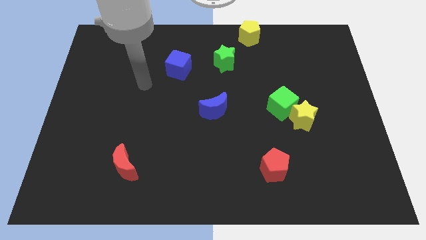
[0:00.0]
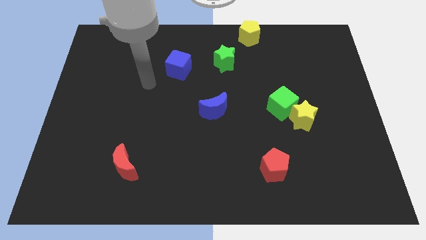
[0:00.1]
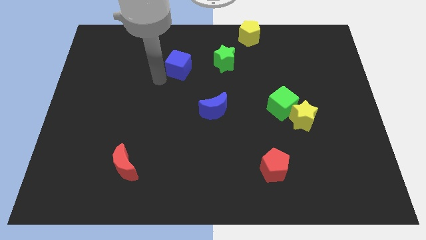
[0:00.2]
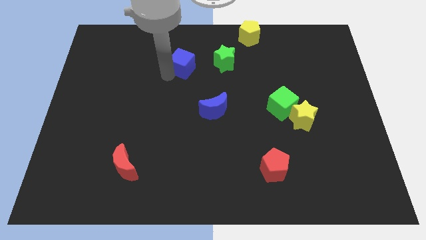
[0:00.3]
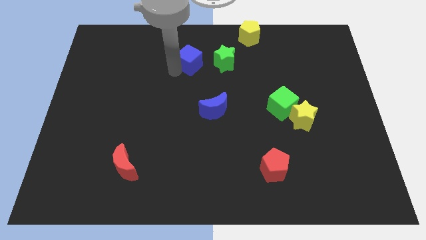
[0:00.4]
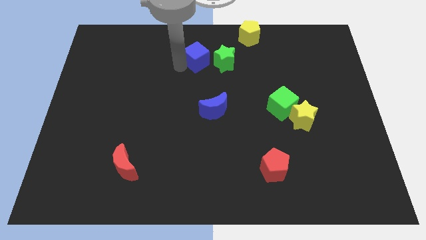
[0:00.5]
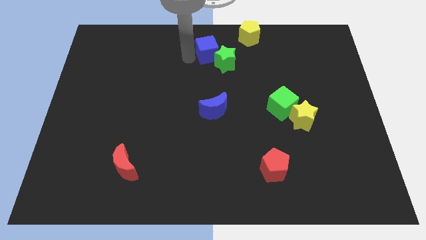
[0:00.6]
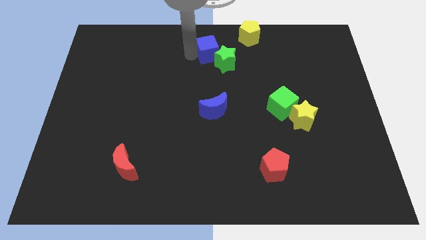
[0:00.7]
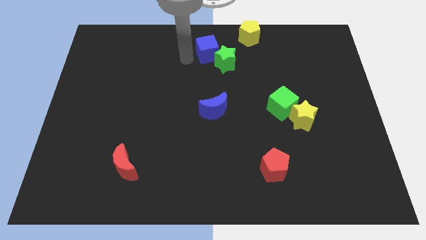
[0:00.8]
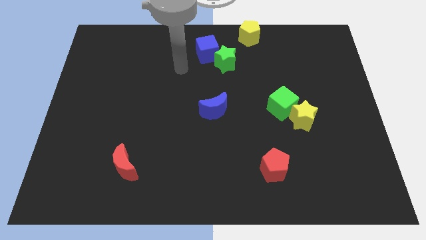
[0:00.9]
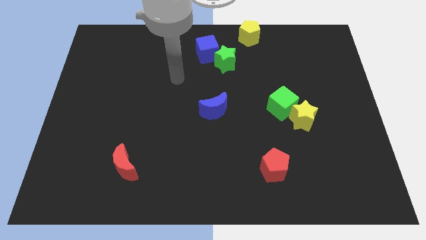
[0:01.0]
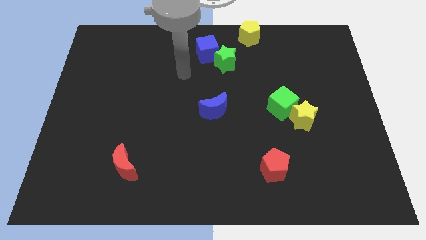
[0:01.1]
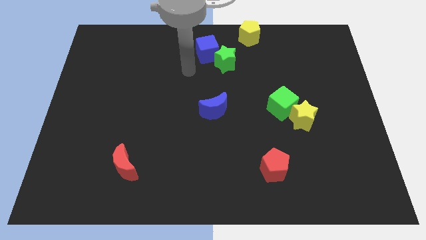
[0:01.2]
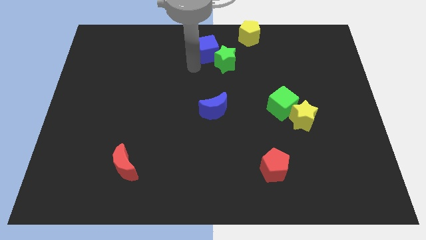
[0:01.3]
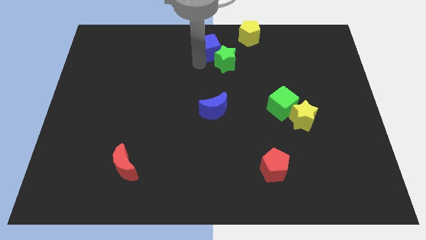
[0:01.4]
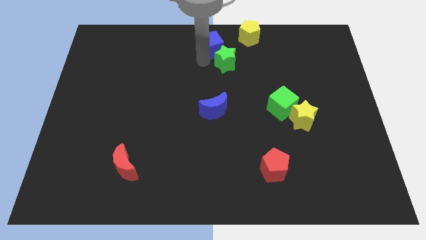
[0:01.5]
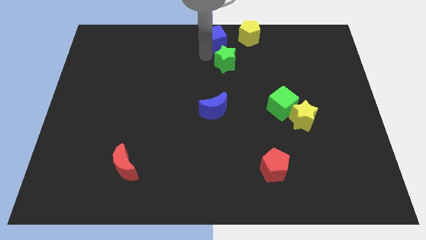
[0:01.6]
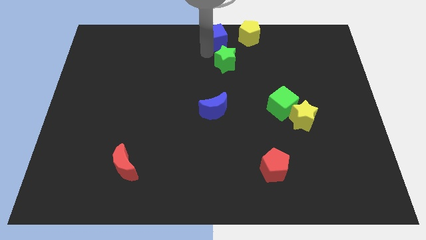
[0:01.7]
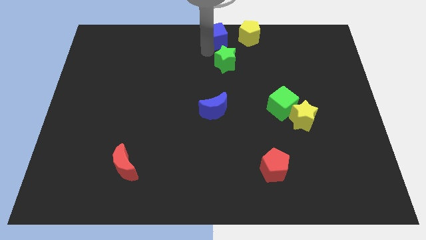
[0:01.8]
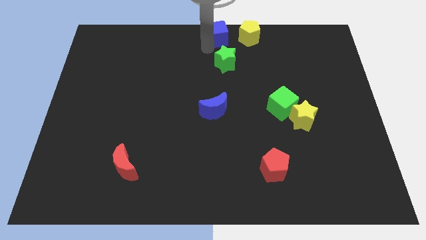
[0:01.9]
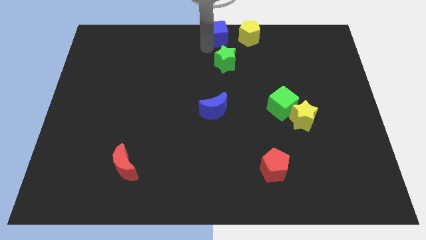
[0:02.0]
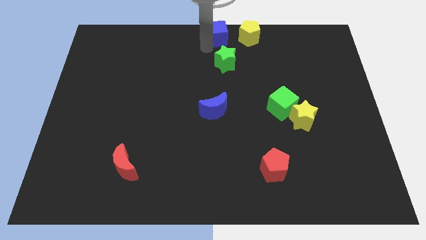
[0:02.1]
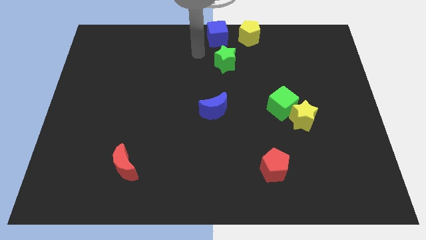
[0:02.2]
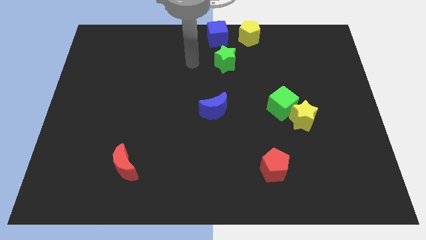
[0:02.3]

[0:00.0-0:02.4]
push the blue moon to the top center

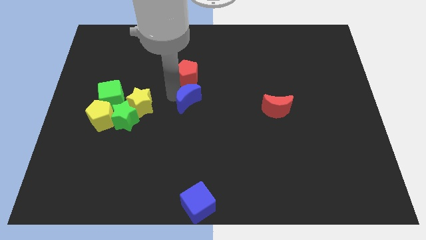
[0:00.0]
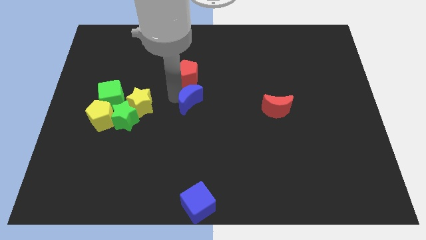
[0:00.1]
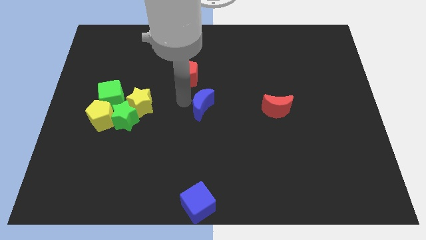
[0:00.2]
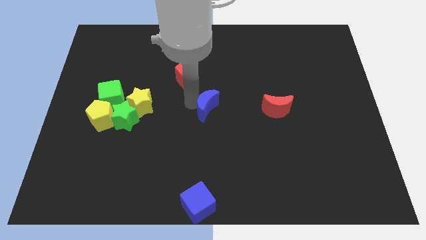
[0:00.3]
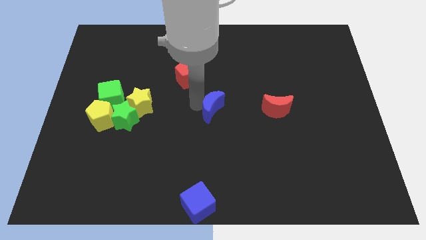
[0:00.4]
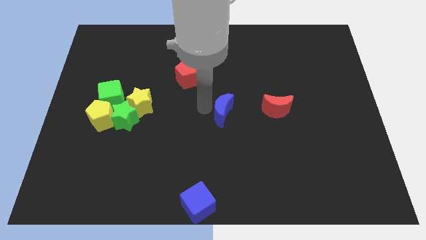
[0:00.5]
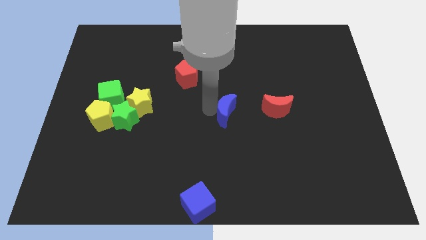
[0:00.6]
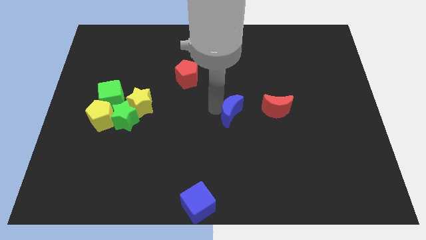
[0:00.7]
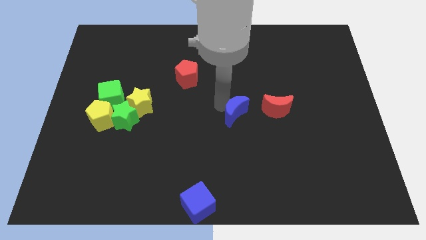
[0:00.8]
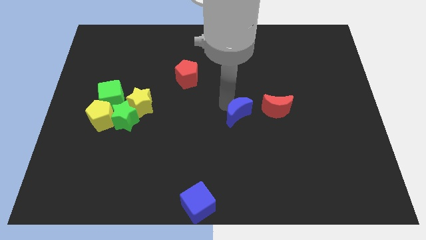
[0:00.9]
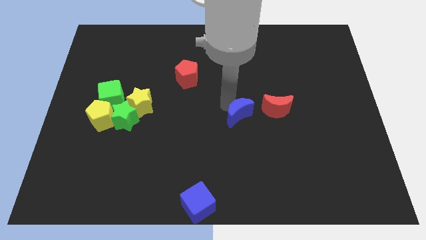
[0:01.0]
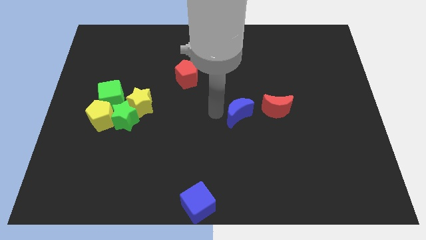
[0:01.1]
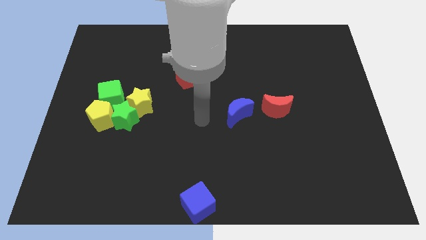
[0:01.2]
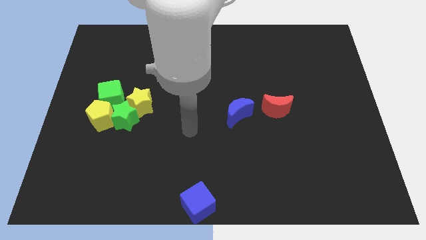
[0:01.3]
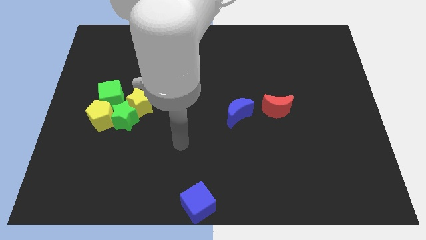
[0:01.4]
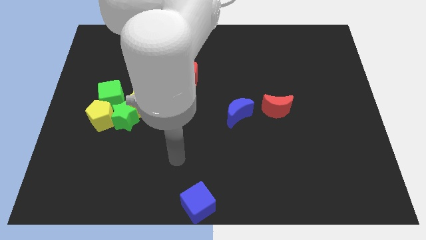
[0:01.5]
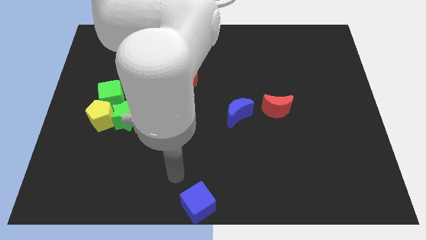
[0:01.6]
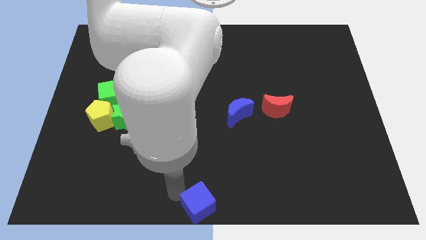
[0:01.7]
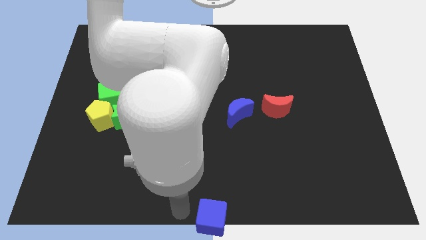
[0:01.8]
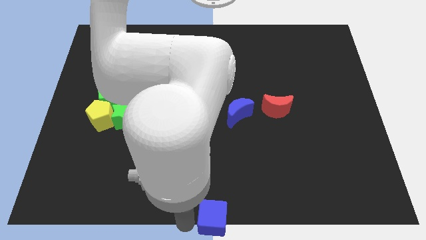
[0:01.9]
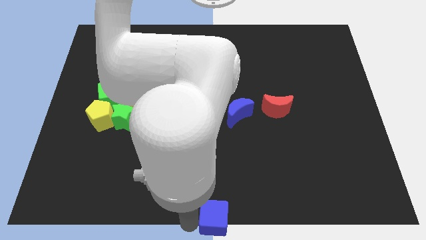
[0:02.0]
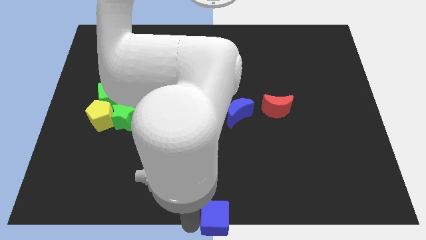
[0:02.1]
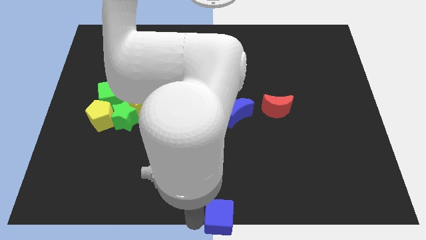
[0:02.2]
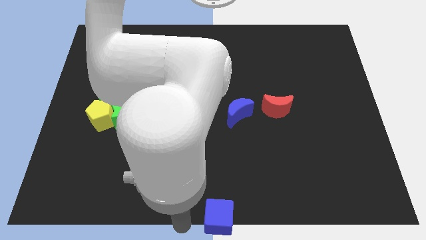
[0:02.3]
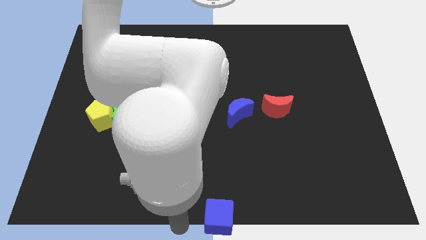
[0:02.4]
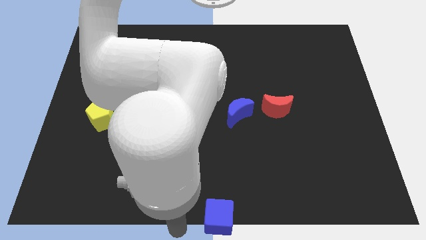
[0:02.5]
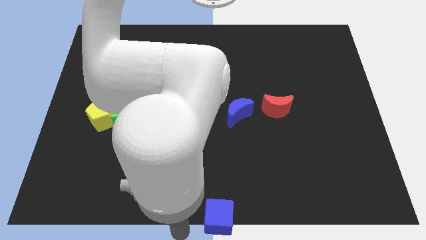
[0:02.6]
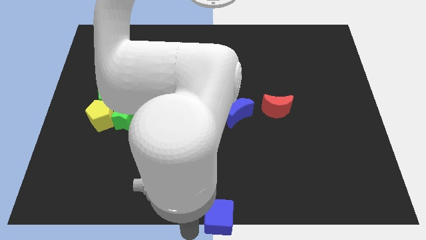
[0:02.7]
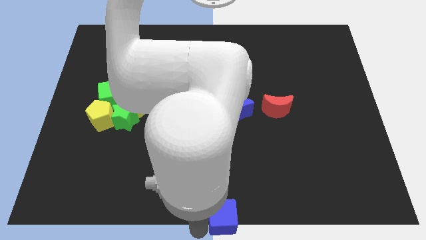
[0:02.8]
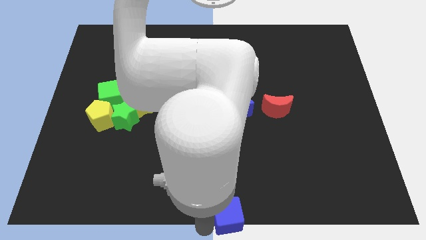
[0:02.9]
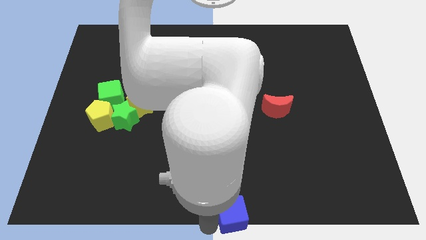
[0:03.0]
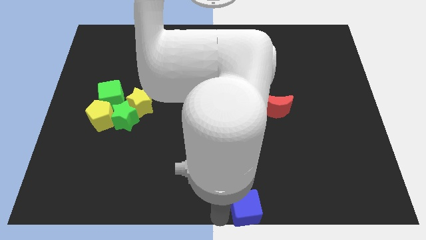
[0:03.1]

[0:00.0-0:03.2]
move your arm towards the blue cube

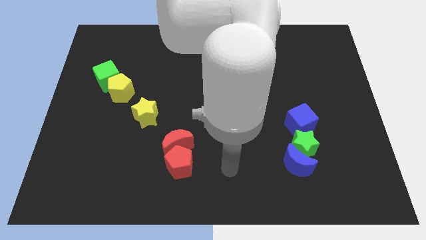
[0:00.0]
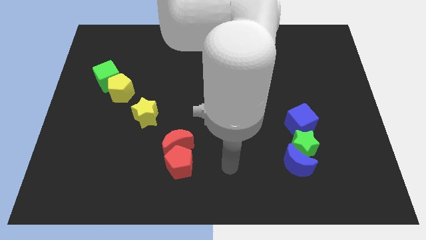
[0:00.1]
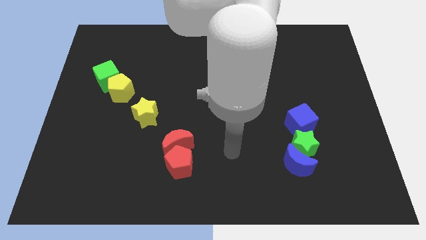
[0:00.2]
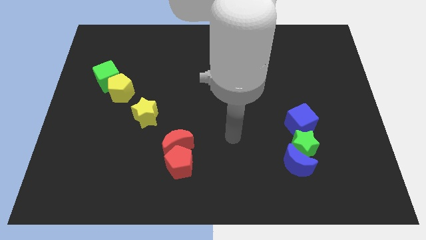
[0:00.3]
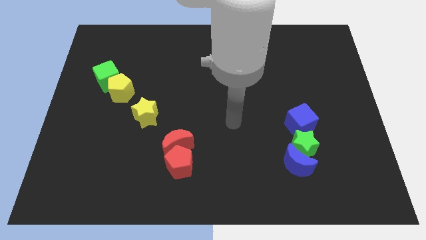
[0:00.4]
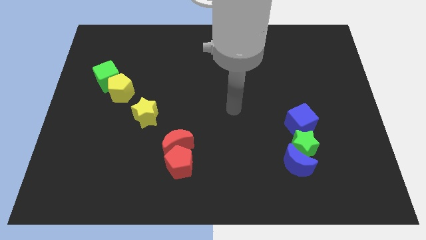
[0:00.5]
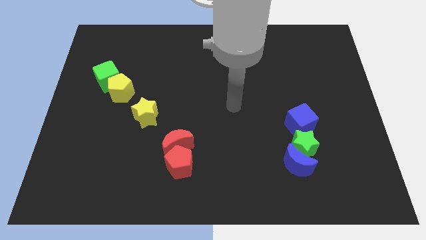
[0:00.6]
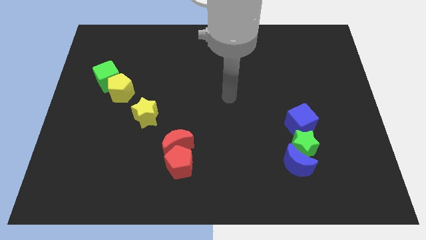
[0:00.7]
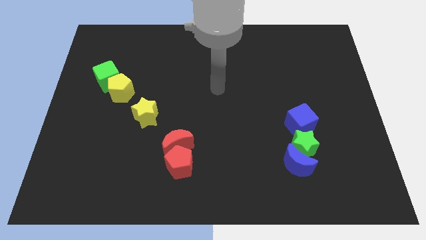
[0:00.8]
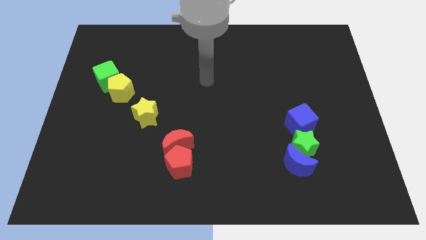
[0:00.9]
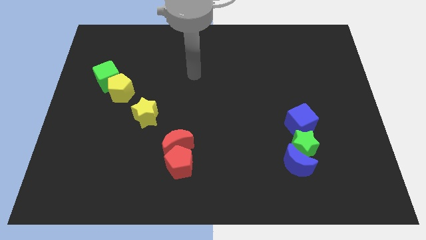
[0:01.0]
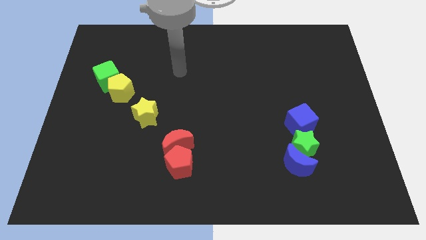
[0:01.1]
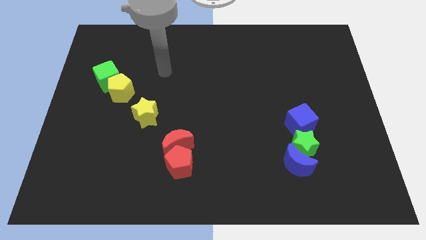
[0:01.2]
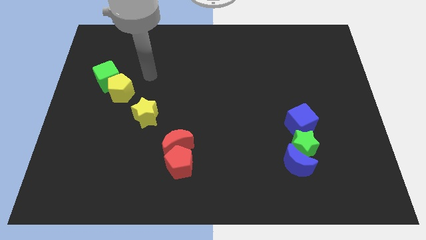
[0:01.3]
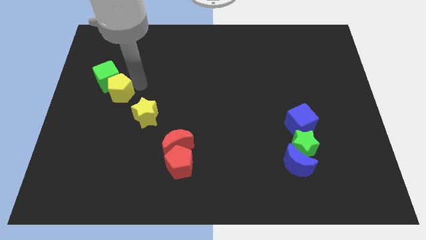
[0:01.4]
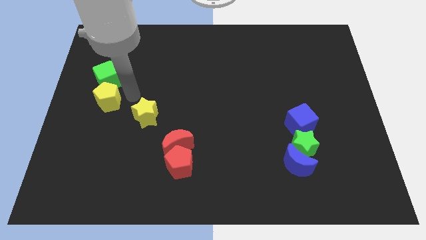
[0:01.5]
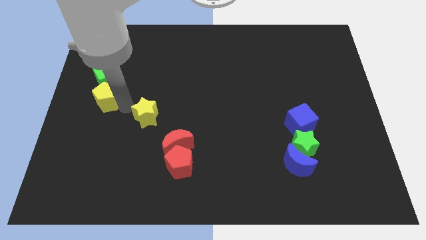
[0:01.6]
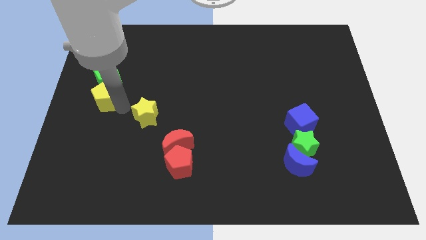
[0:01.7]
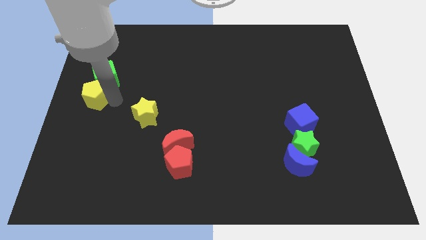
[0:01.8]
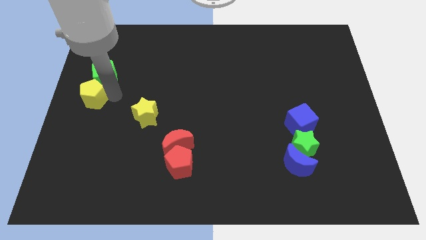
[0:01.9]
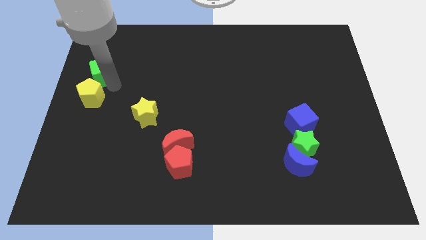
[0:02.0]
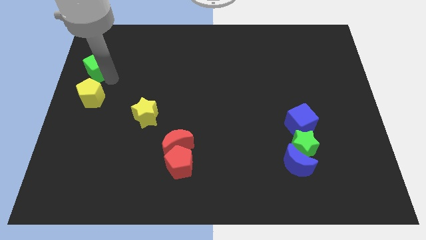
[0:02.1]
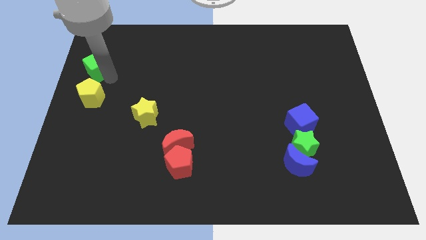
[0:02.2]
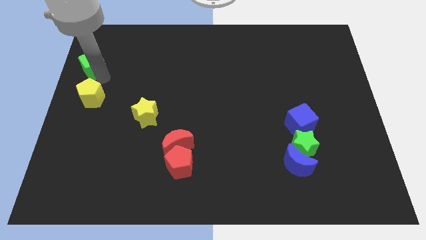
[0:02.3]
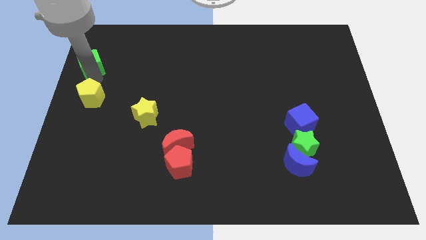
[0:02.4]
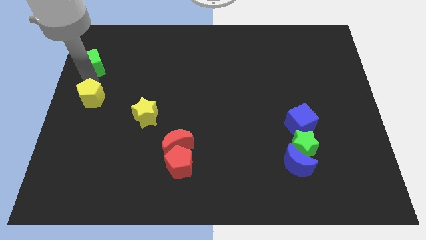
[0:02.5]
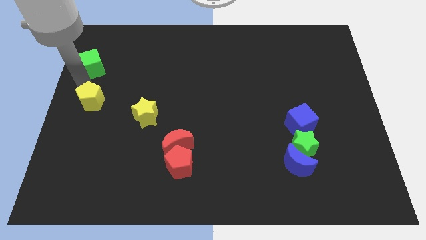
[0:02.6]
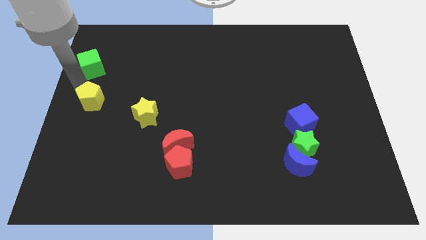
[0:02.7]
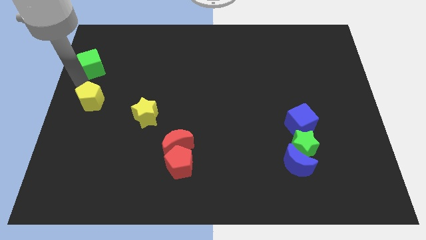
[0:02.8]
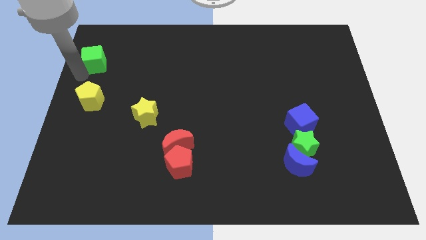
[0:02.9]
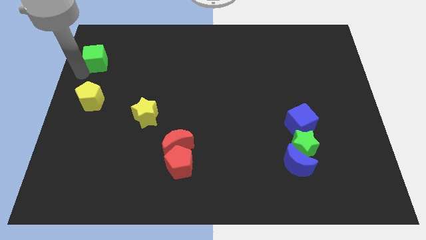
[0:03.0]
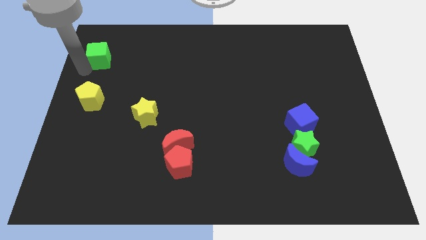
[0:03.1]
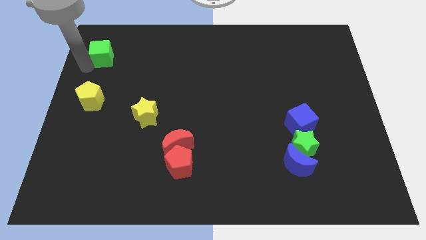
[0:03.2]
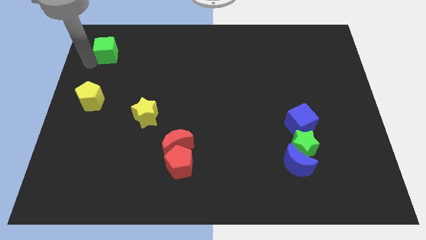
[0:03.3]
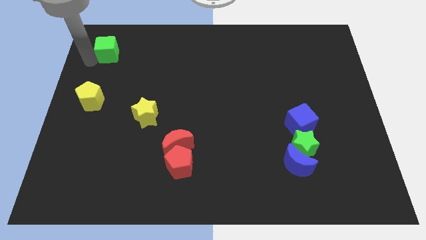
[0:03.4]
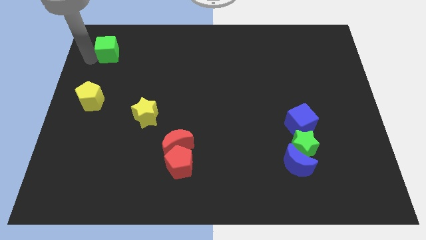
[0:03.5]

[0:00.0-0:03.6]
slide the green cube away from the yellow pentagon
